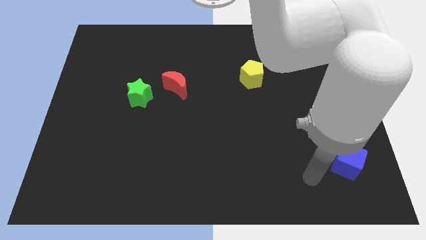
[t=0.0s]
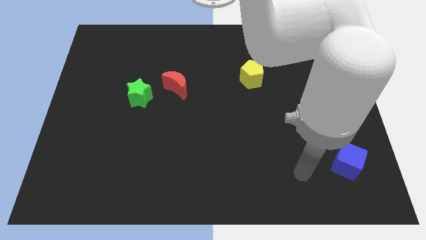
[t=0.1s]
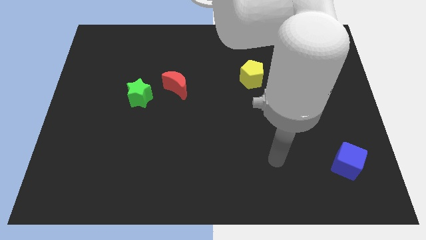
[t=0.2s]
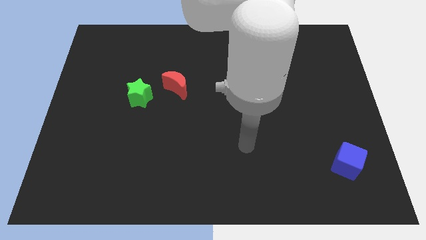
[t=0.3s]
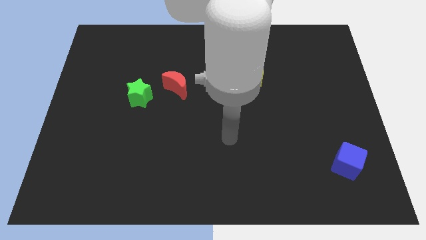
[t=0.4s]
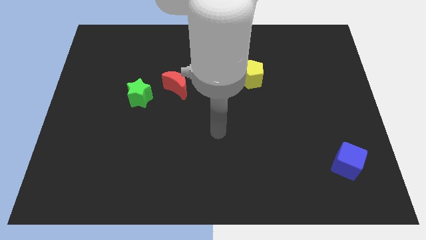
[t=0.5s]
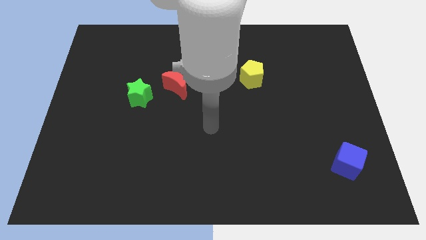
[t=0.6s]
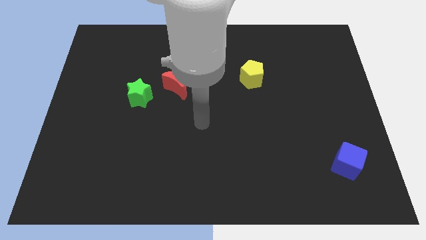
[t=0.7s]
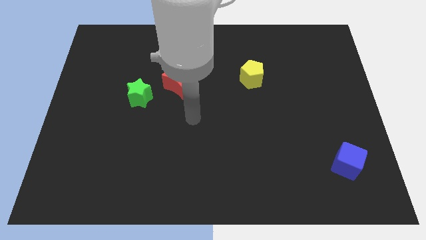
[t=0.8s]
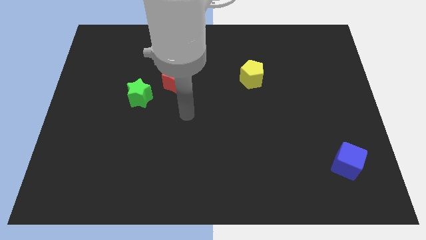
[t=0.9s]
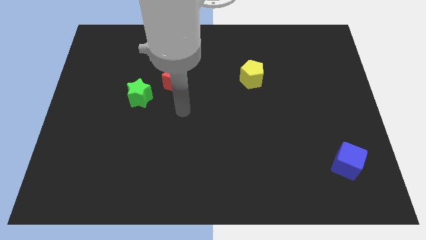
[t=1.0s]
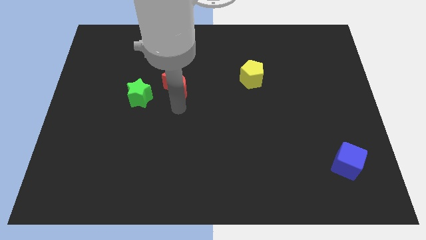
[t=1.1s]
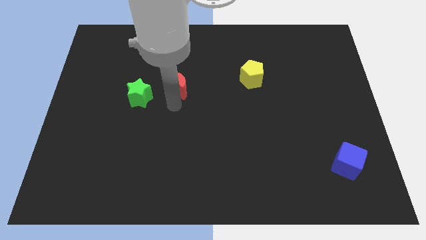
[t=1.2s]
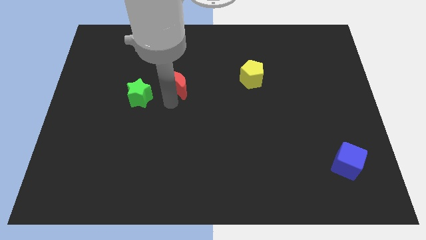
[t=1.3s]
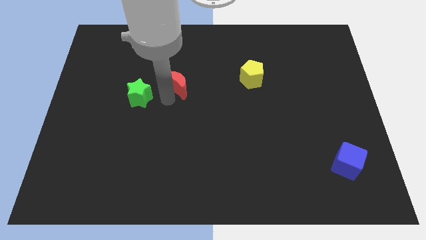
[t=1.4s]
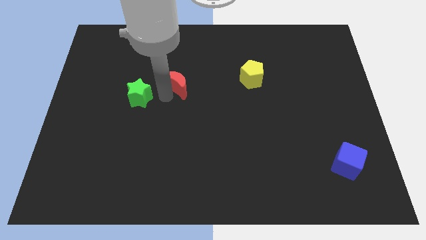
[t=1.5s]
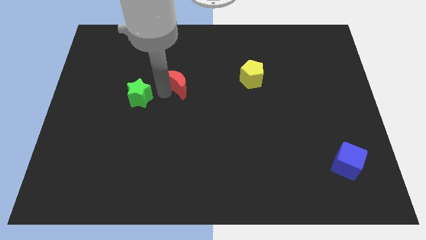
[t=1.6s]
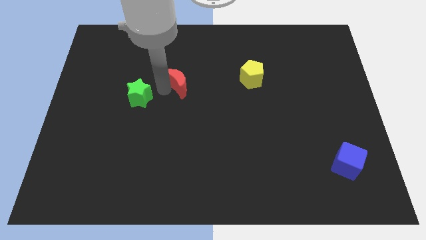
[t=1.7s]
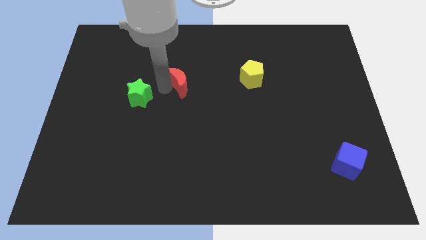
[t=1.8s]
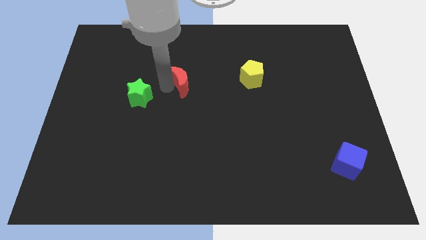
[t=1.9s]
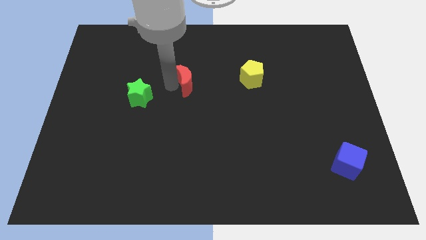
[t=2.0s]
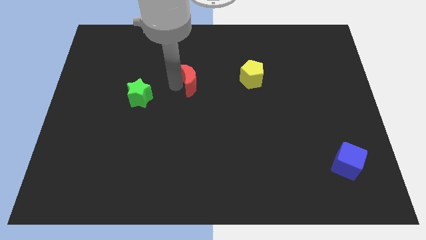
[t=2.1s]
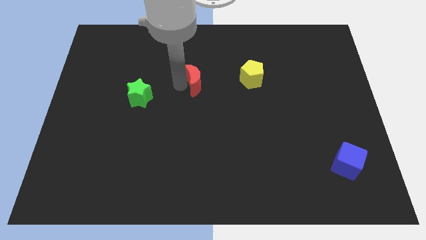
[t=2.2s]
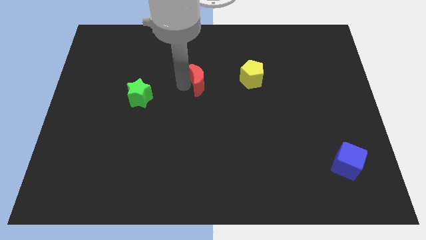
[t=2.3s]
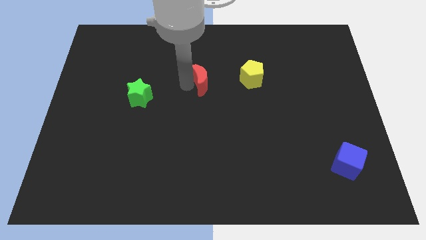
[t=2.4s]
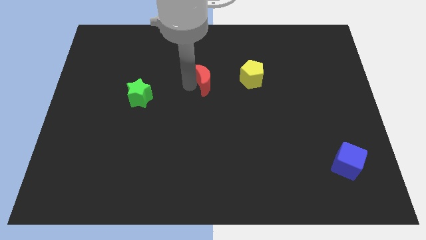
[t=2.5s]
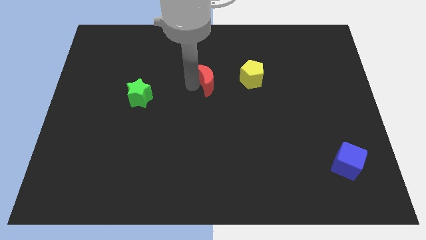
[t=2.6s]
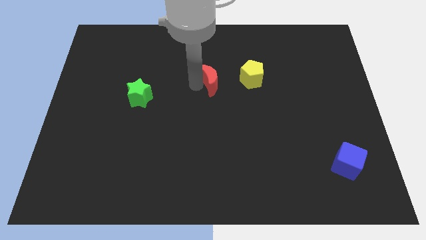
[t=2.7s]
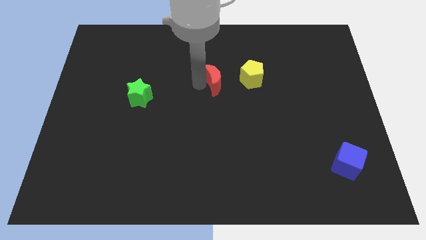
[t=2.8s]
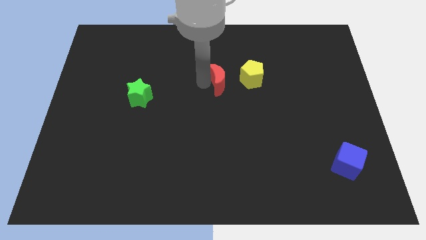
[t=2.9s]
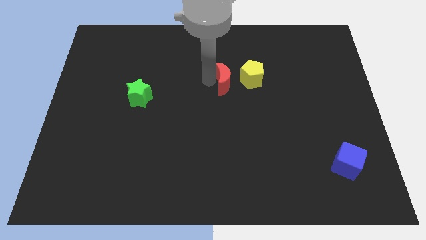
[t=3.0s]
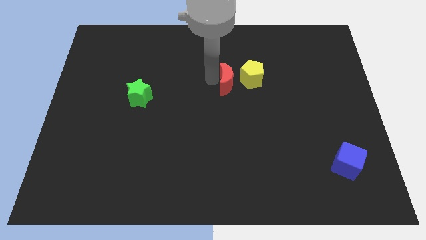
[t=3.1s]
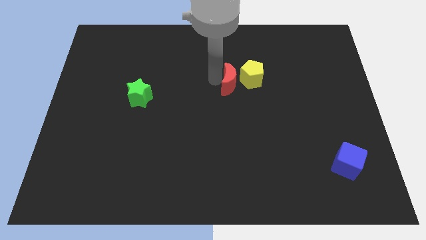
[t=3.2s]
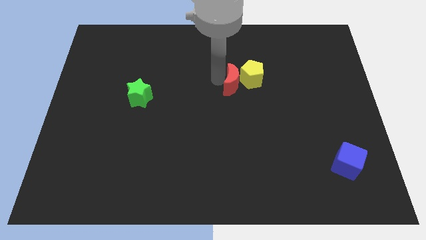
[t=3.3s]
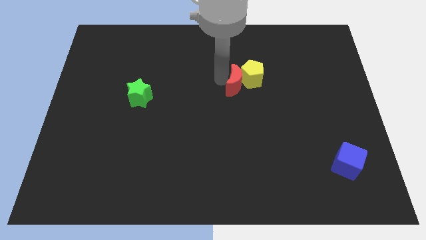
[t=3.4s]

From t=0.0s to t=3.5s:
put the red moon to the pentagon

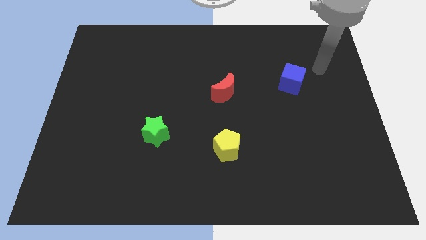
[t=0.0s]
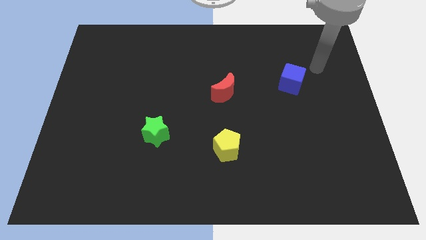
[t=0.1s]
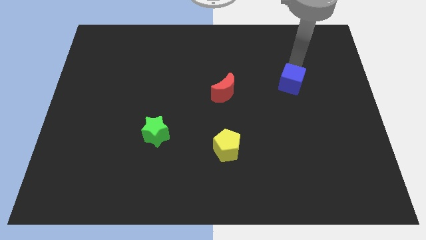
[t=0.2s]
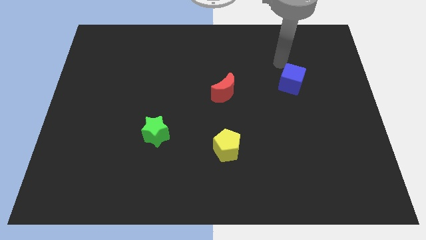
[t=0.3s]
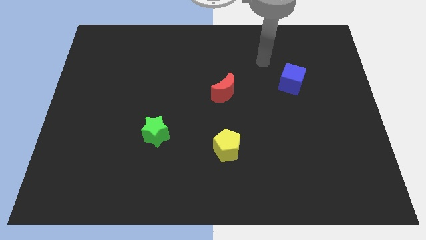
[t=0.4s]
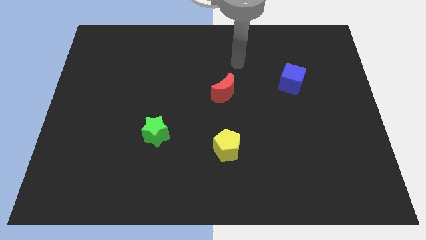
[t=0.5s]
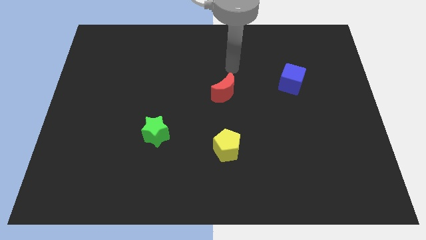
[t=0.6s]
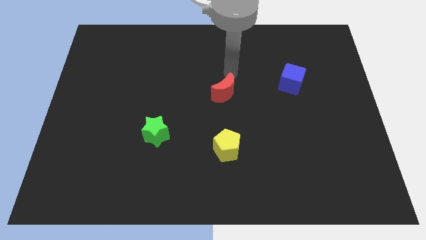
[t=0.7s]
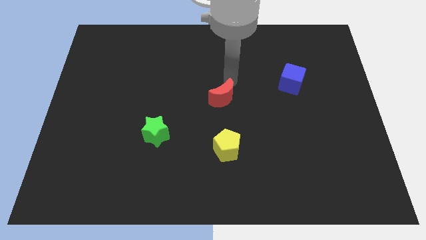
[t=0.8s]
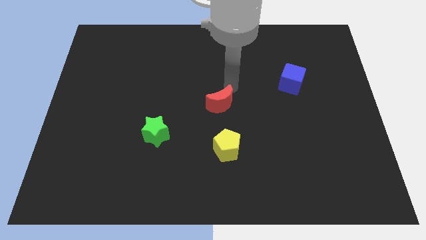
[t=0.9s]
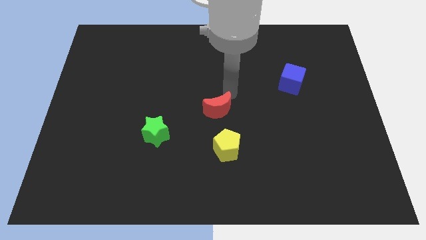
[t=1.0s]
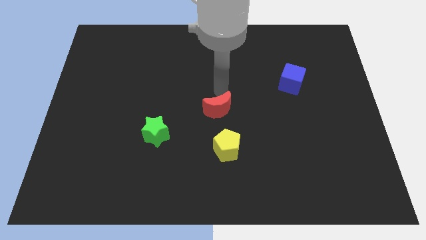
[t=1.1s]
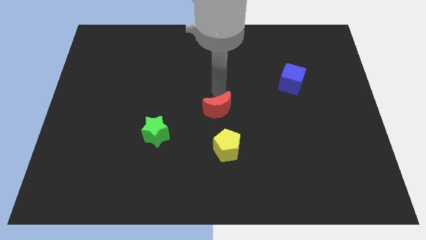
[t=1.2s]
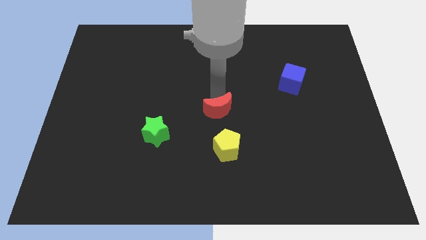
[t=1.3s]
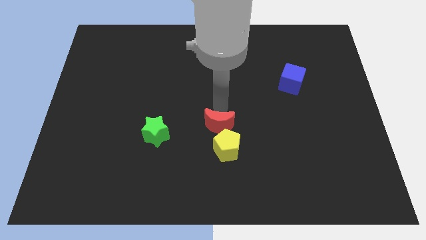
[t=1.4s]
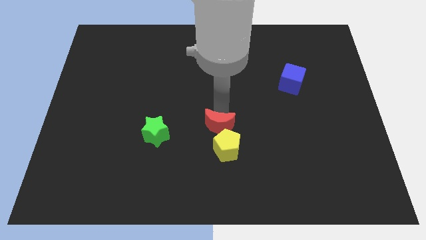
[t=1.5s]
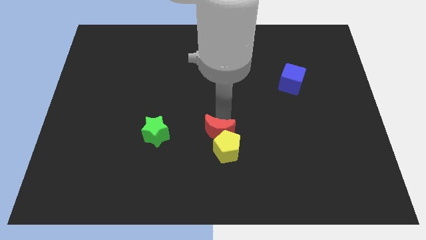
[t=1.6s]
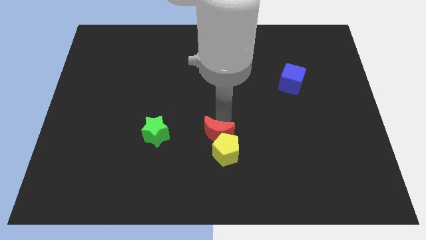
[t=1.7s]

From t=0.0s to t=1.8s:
push the red moon towards the pentagon

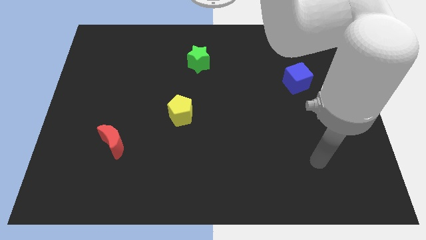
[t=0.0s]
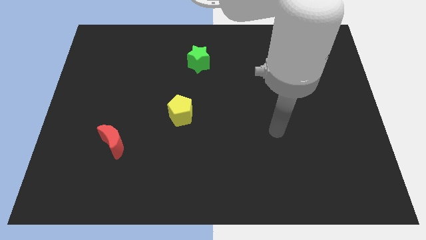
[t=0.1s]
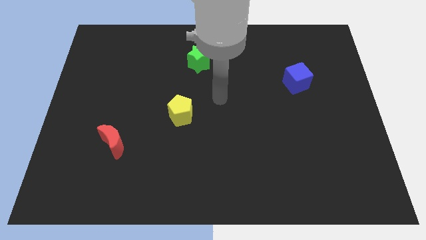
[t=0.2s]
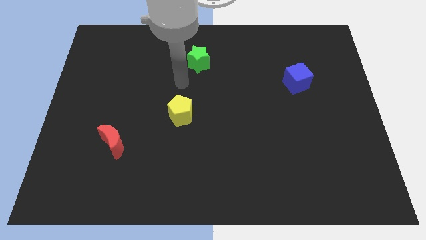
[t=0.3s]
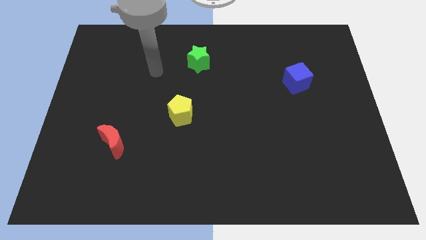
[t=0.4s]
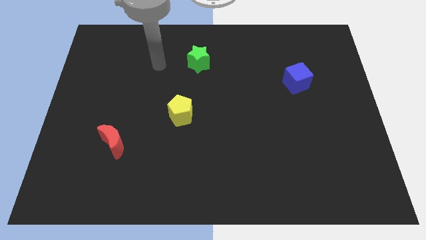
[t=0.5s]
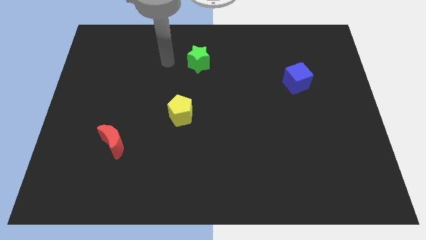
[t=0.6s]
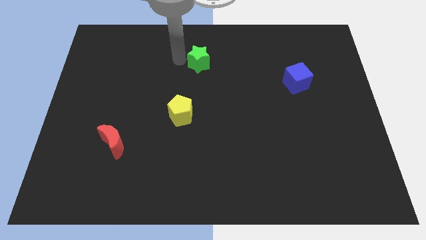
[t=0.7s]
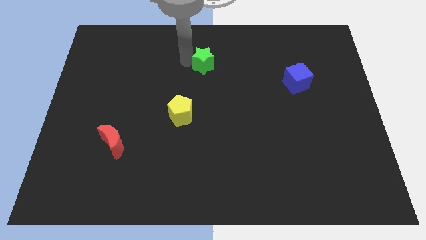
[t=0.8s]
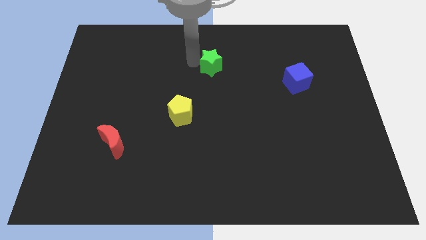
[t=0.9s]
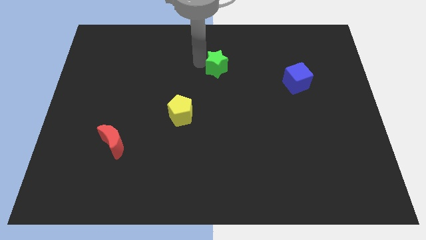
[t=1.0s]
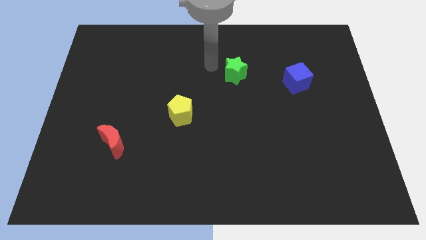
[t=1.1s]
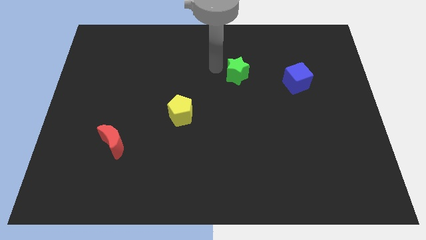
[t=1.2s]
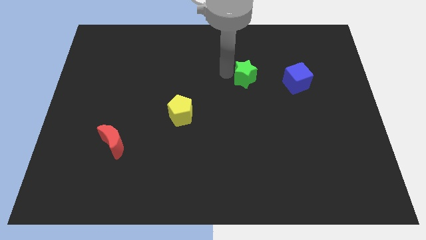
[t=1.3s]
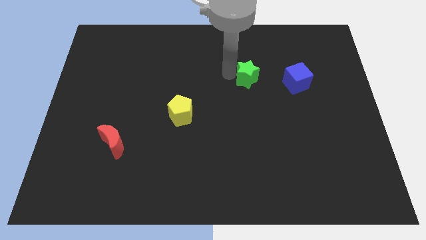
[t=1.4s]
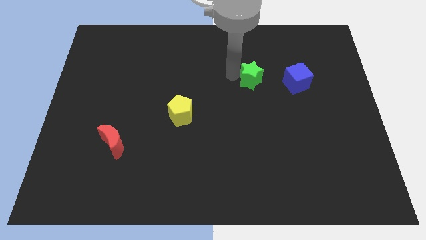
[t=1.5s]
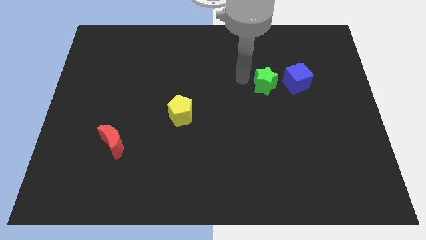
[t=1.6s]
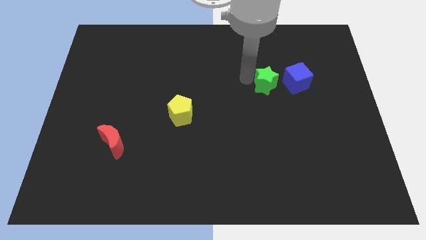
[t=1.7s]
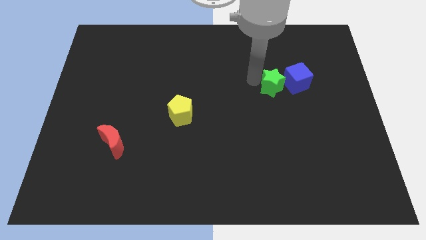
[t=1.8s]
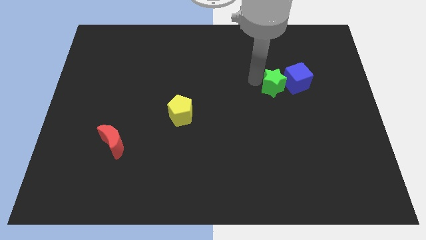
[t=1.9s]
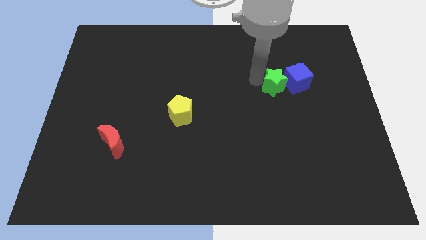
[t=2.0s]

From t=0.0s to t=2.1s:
move the green block next to the blue block

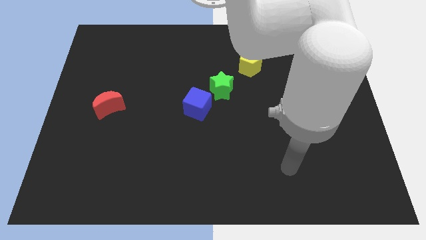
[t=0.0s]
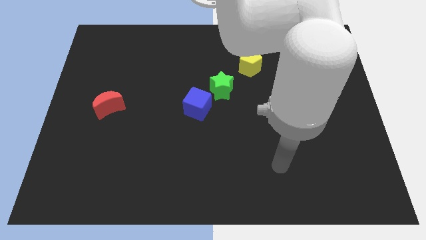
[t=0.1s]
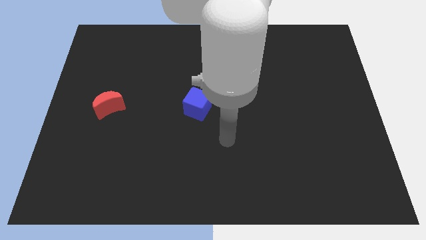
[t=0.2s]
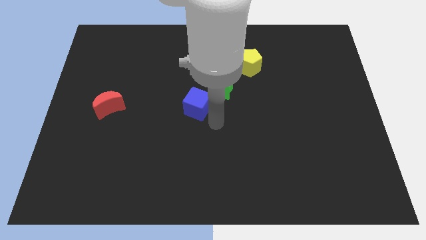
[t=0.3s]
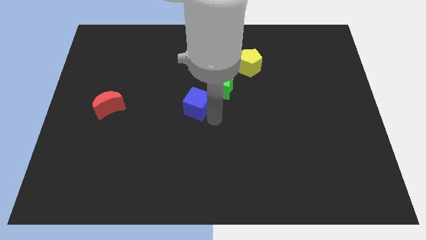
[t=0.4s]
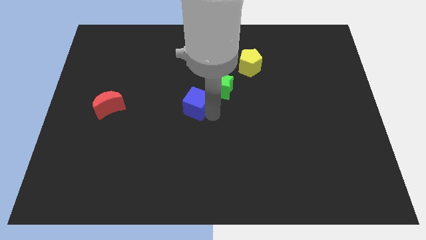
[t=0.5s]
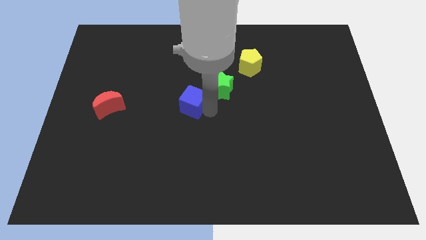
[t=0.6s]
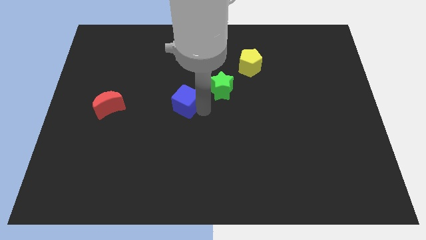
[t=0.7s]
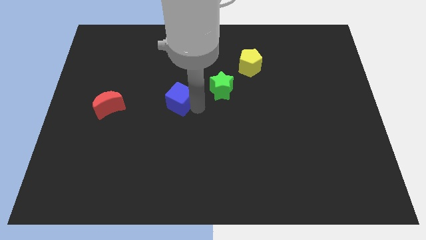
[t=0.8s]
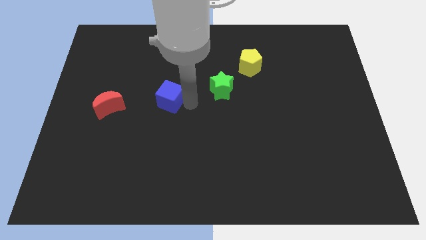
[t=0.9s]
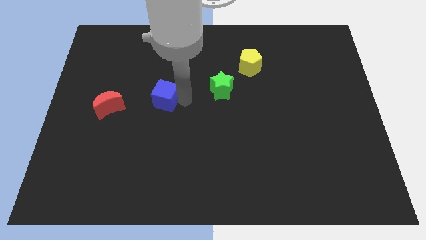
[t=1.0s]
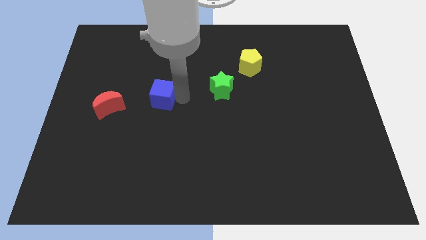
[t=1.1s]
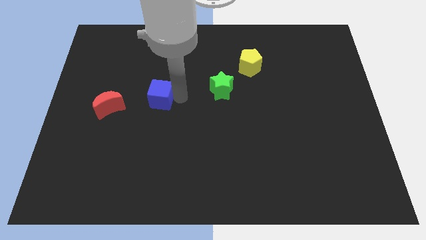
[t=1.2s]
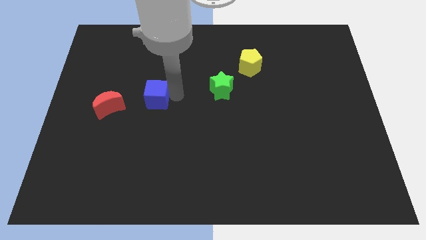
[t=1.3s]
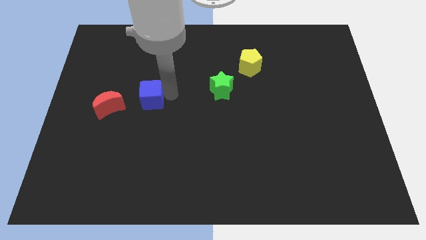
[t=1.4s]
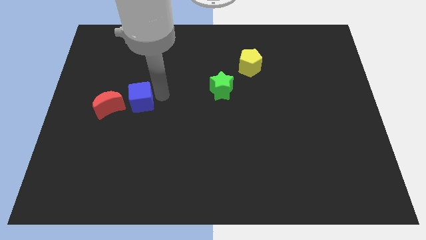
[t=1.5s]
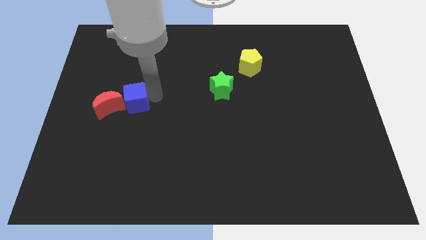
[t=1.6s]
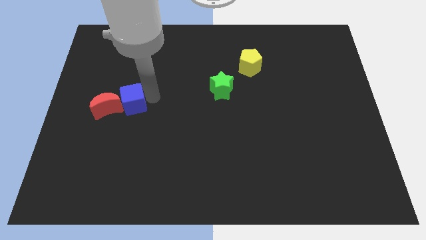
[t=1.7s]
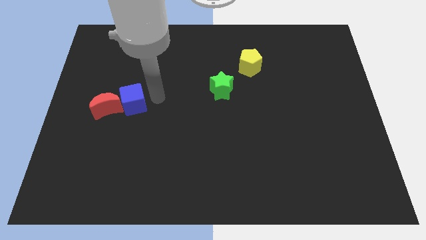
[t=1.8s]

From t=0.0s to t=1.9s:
move the blue block next to the moon
